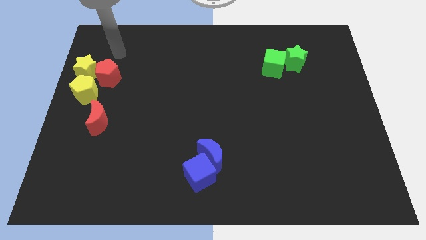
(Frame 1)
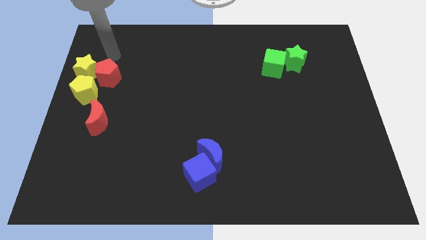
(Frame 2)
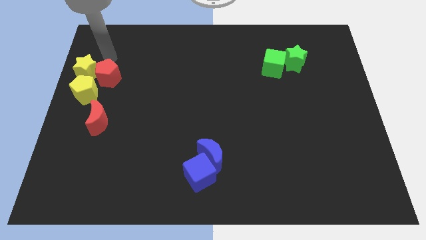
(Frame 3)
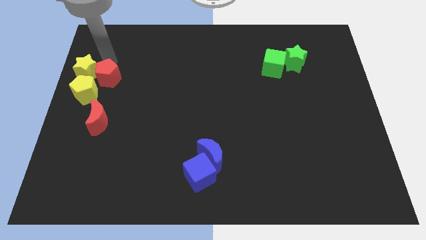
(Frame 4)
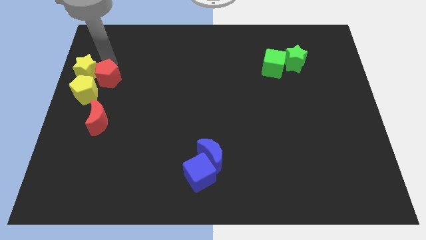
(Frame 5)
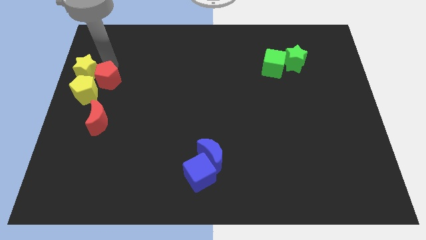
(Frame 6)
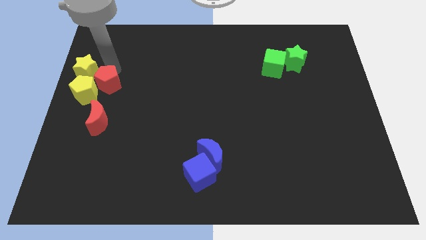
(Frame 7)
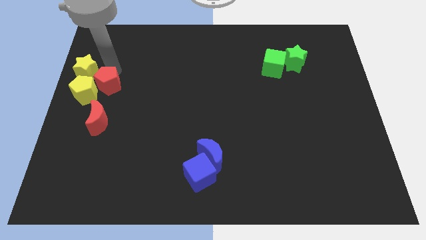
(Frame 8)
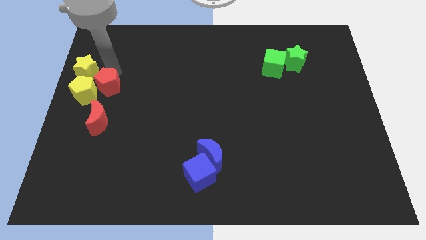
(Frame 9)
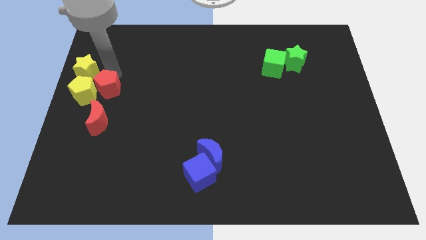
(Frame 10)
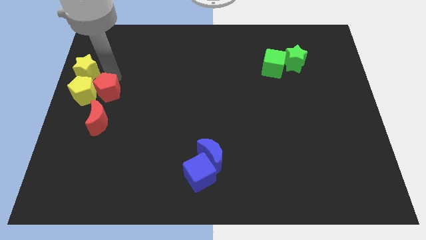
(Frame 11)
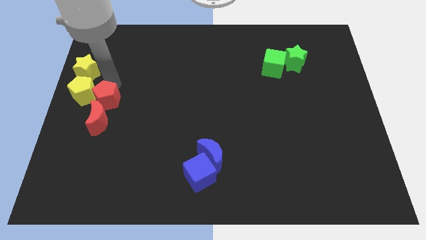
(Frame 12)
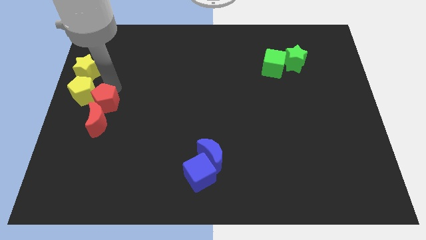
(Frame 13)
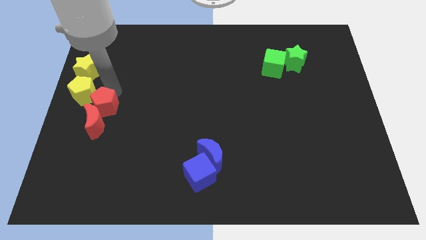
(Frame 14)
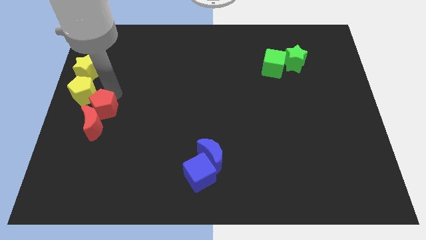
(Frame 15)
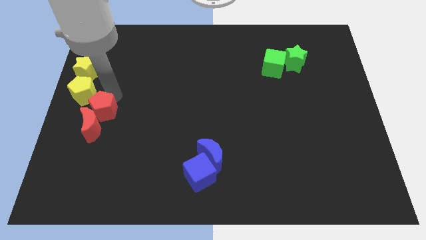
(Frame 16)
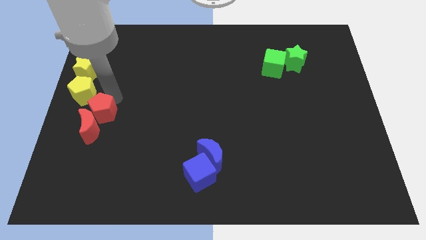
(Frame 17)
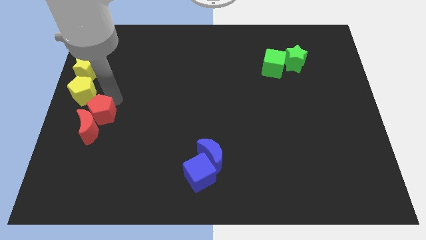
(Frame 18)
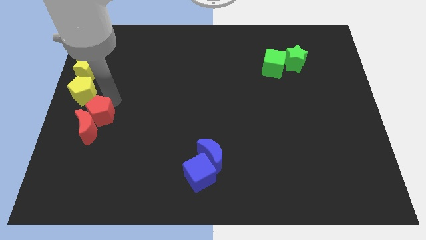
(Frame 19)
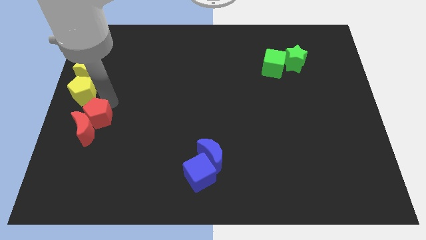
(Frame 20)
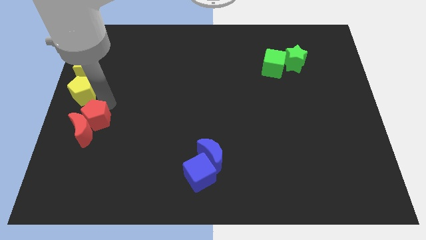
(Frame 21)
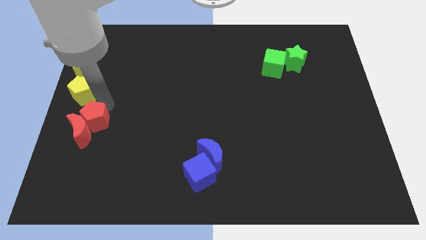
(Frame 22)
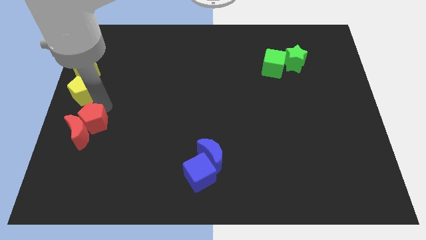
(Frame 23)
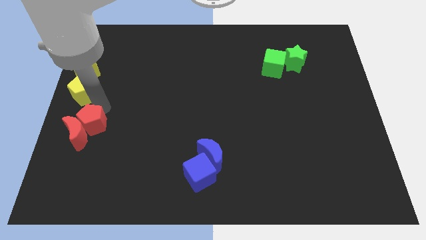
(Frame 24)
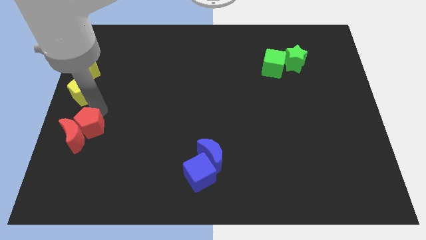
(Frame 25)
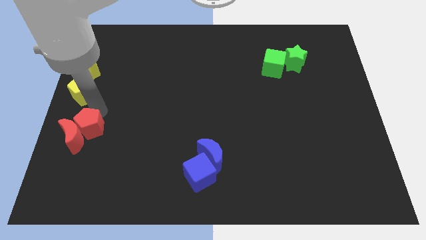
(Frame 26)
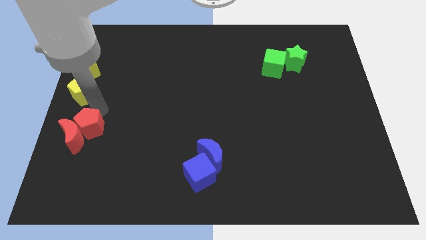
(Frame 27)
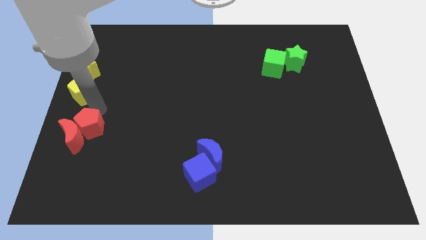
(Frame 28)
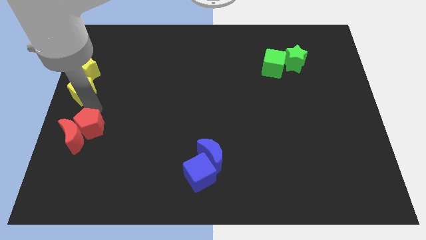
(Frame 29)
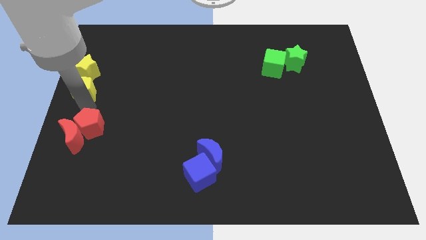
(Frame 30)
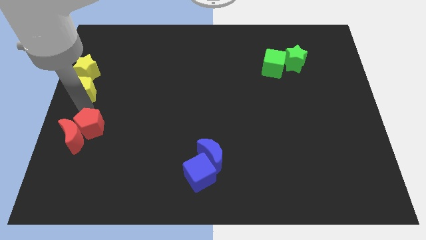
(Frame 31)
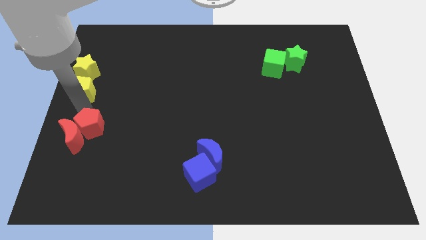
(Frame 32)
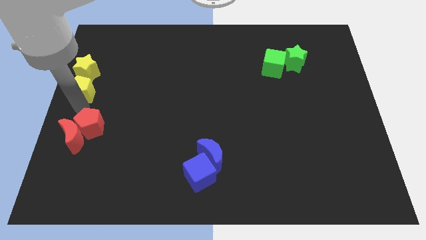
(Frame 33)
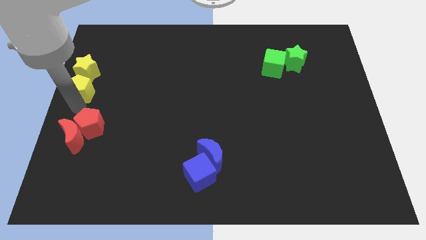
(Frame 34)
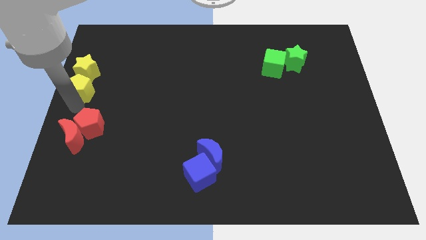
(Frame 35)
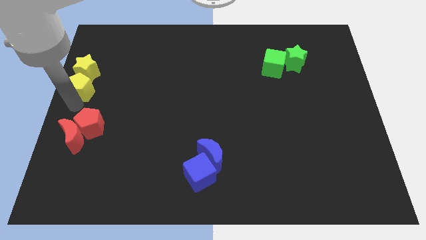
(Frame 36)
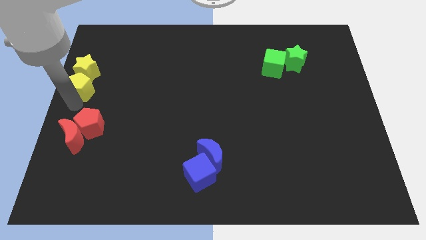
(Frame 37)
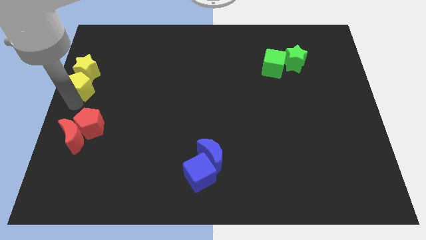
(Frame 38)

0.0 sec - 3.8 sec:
push the red pentagon and the red moon towards down

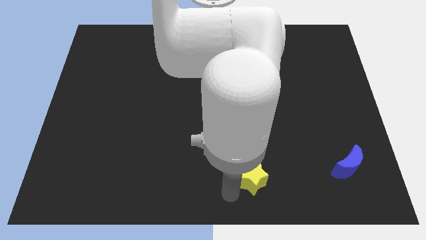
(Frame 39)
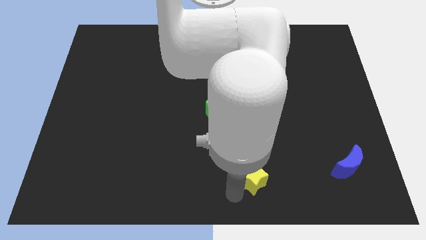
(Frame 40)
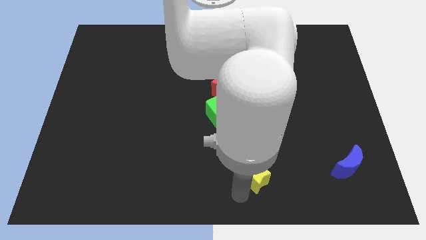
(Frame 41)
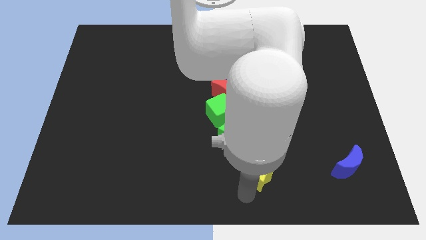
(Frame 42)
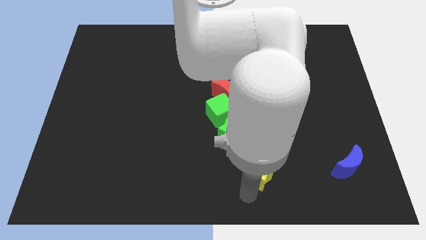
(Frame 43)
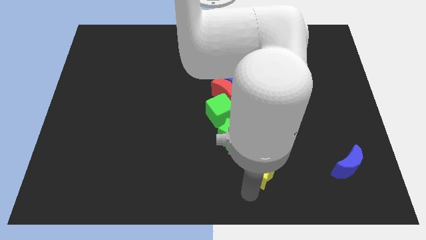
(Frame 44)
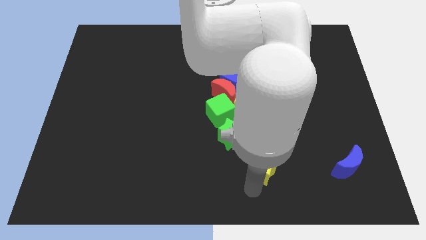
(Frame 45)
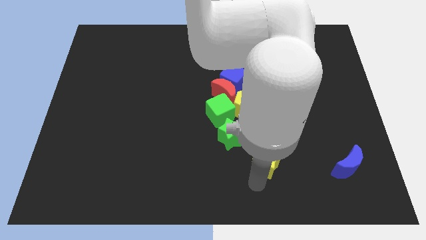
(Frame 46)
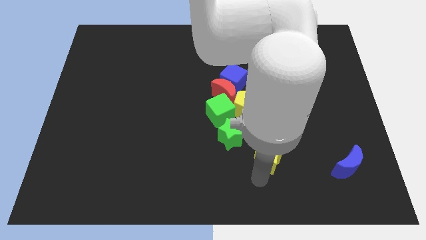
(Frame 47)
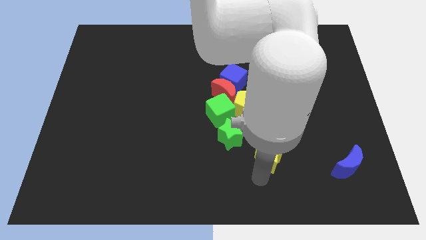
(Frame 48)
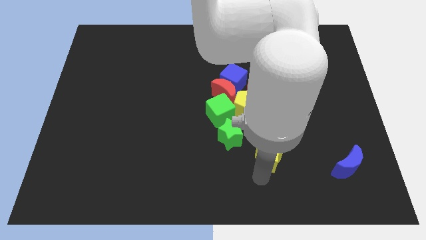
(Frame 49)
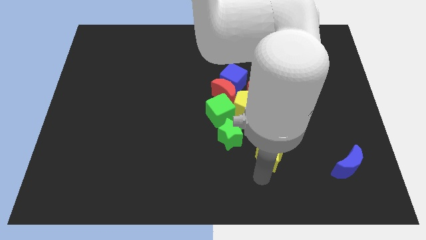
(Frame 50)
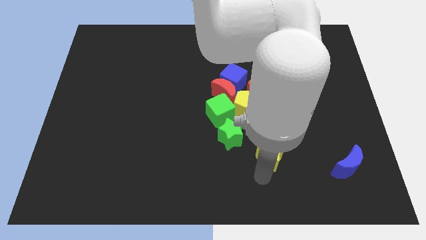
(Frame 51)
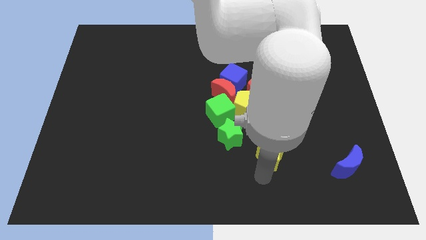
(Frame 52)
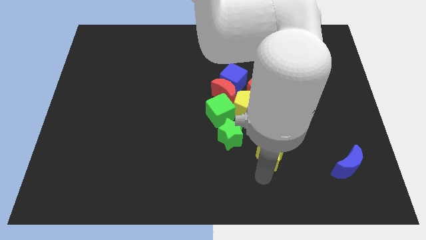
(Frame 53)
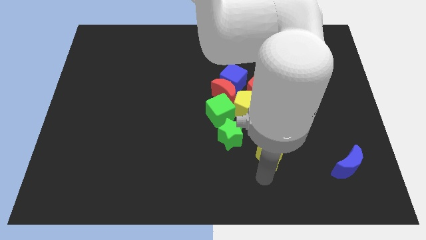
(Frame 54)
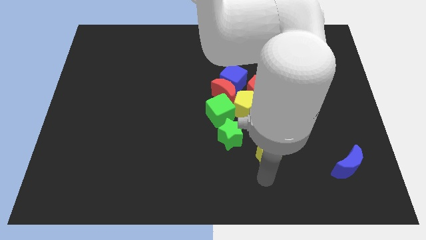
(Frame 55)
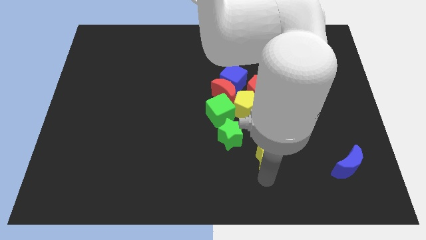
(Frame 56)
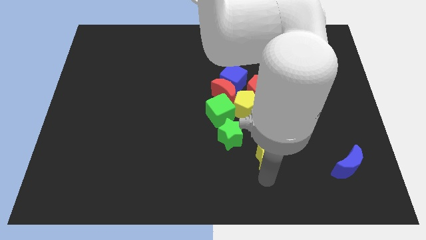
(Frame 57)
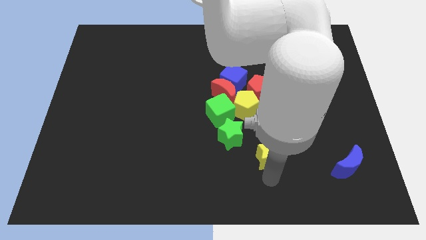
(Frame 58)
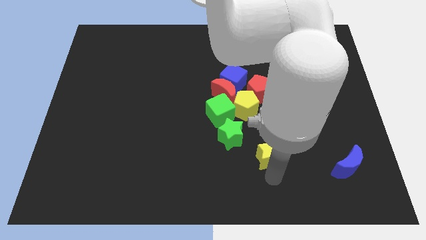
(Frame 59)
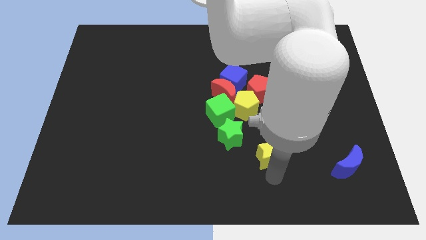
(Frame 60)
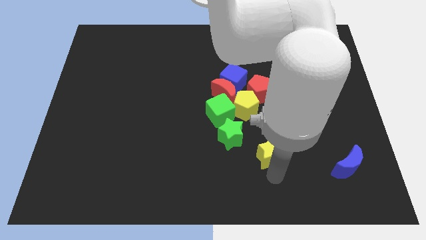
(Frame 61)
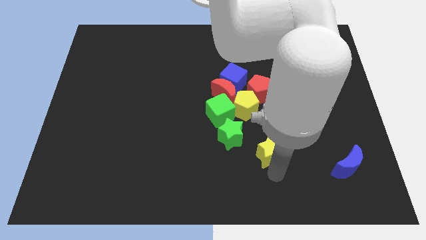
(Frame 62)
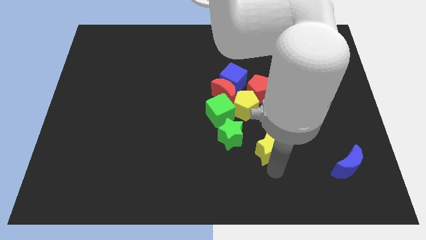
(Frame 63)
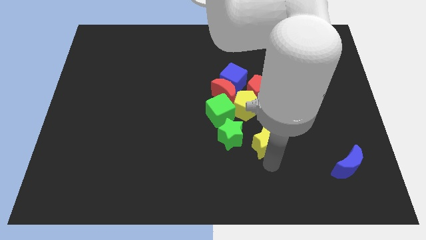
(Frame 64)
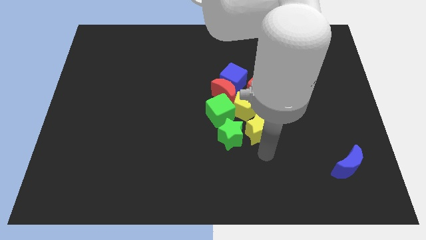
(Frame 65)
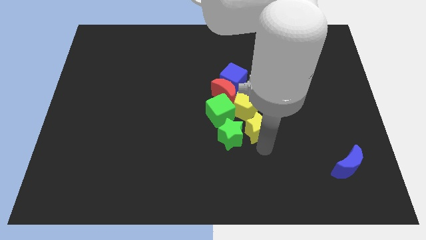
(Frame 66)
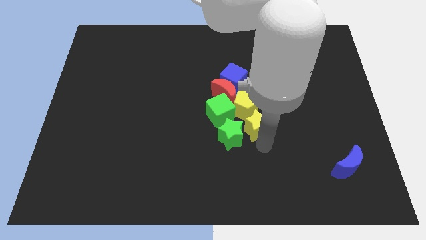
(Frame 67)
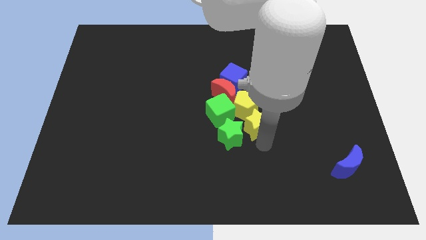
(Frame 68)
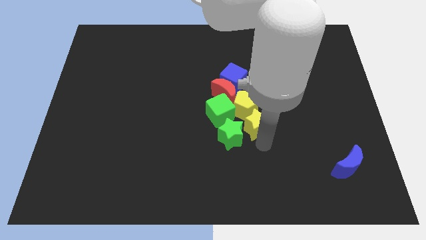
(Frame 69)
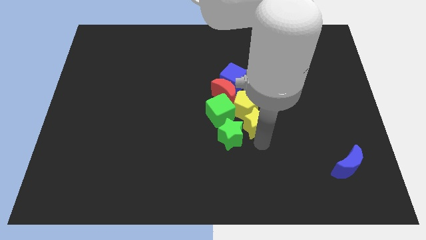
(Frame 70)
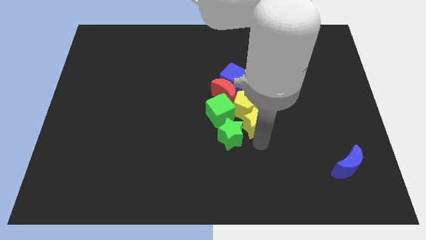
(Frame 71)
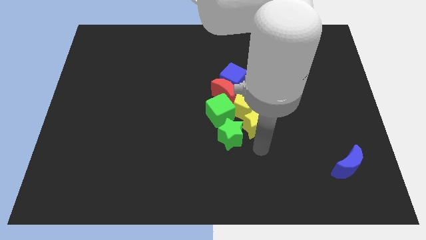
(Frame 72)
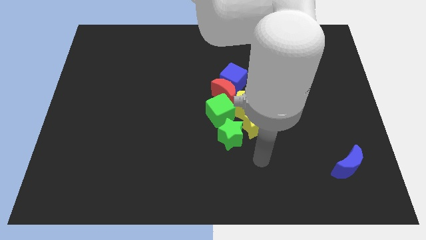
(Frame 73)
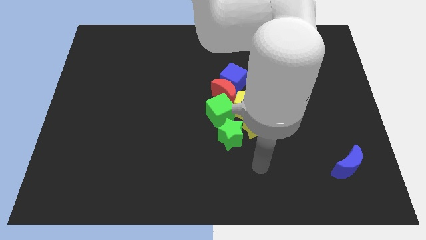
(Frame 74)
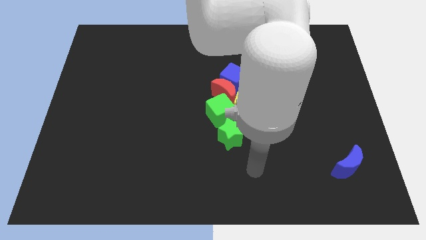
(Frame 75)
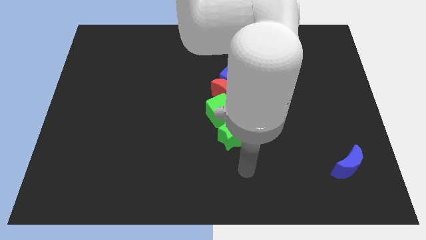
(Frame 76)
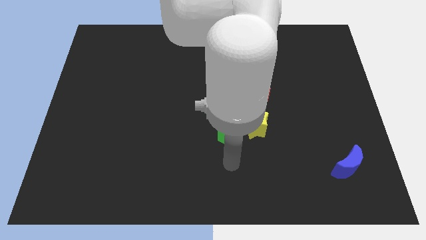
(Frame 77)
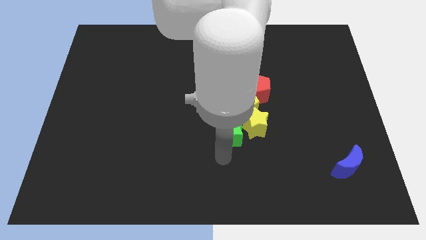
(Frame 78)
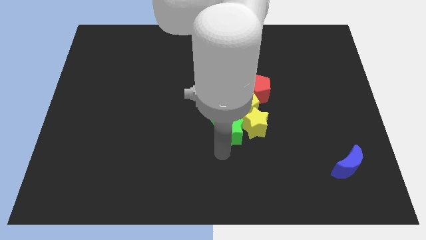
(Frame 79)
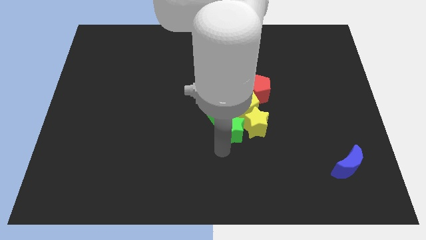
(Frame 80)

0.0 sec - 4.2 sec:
move yellow star to the right of the green star

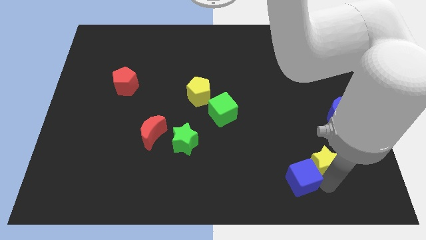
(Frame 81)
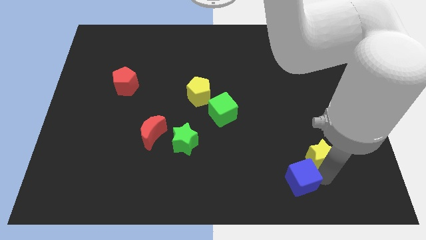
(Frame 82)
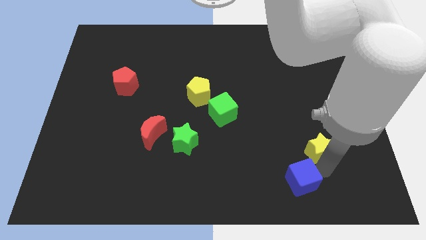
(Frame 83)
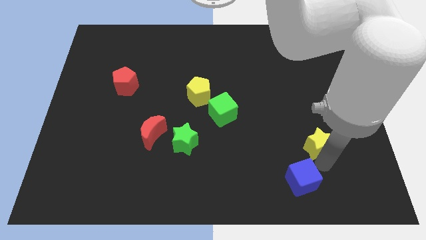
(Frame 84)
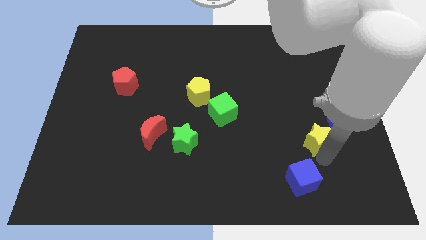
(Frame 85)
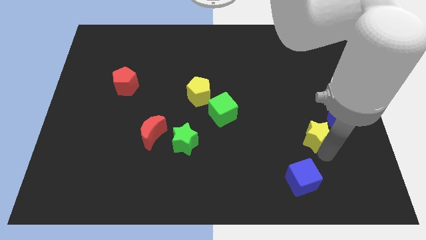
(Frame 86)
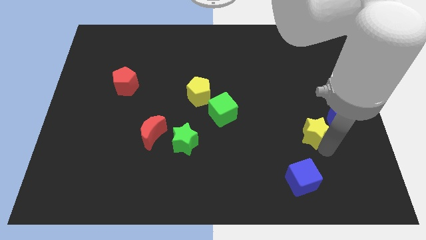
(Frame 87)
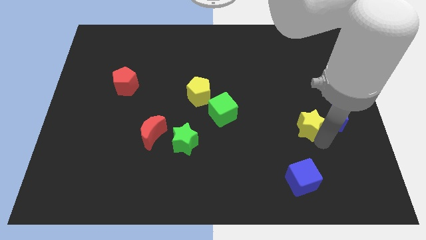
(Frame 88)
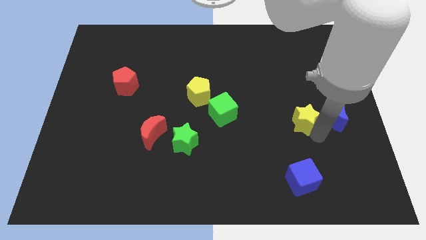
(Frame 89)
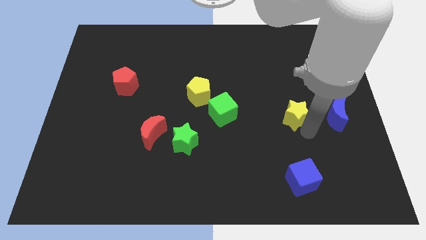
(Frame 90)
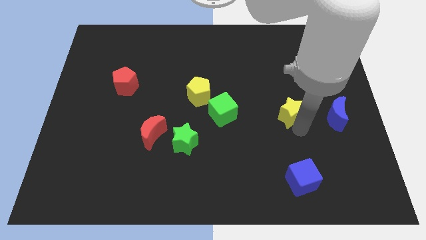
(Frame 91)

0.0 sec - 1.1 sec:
move the yellow star to the left of the blue moon
